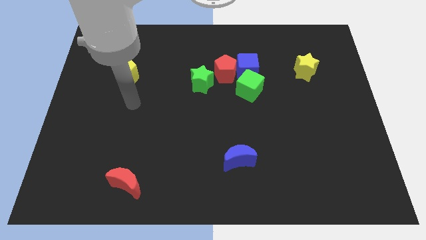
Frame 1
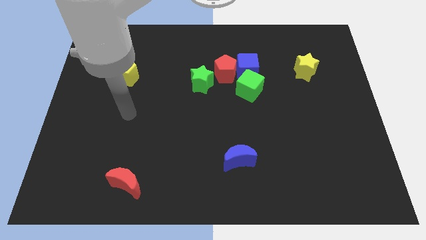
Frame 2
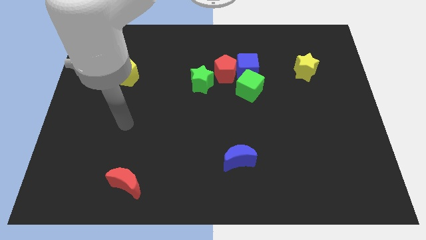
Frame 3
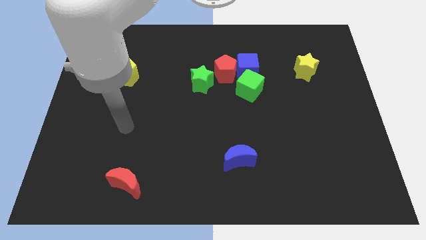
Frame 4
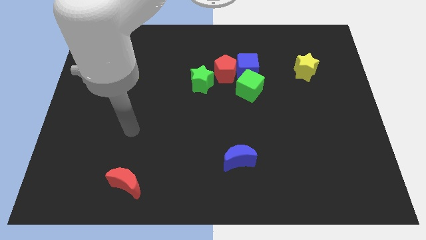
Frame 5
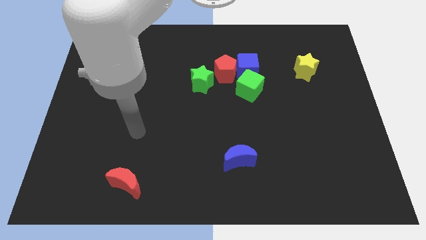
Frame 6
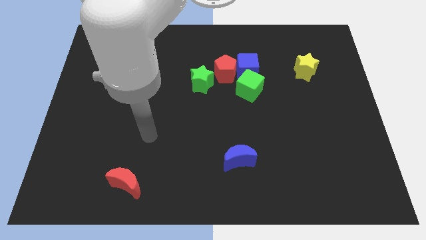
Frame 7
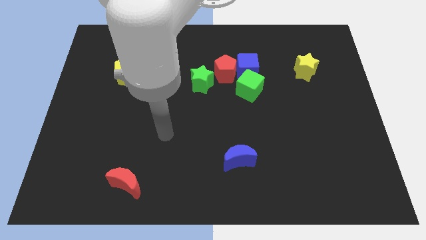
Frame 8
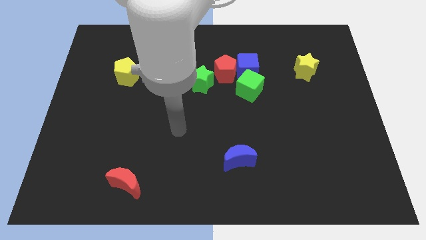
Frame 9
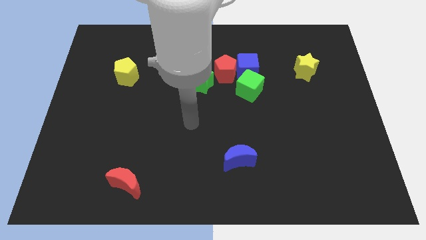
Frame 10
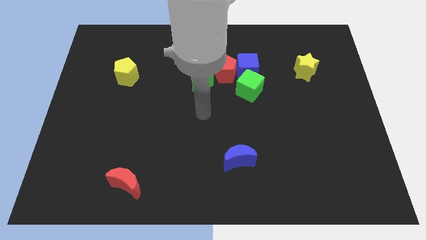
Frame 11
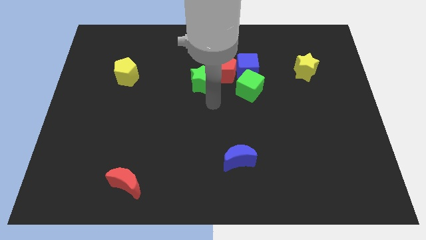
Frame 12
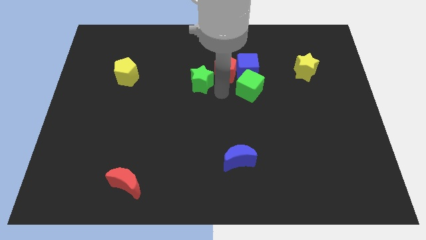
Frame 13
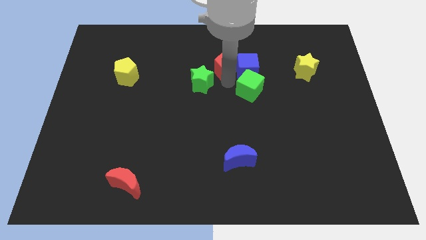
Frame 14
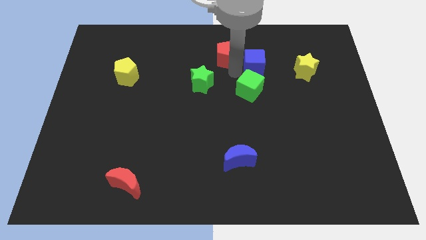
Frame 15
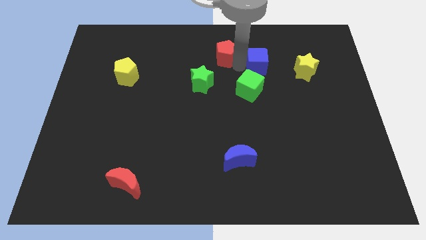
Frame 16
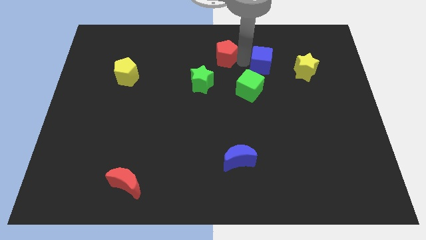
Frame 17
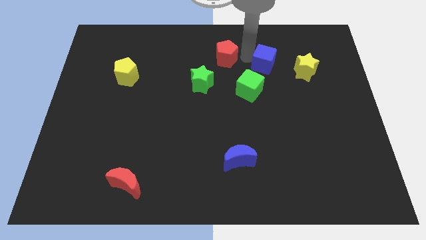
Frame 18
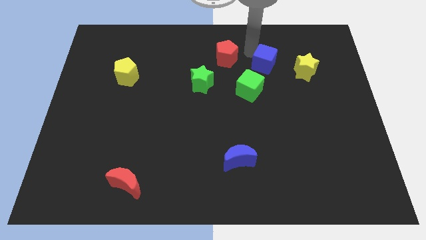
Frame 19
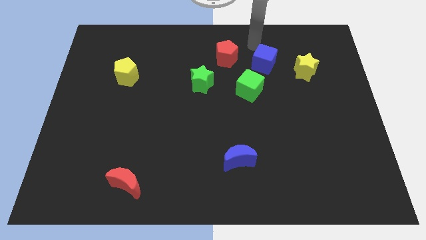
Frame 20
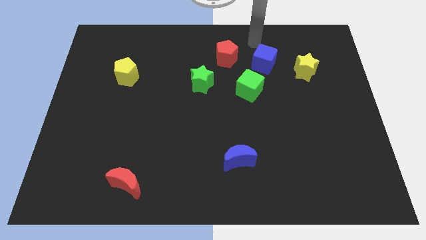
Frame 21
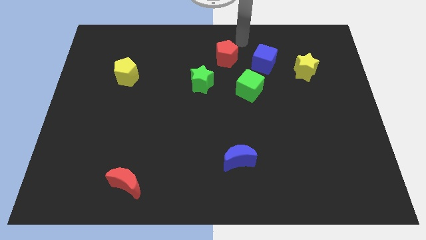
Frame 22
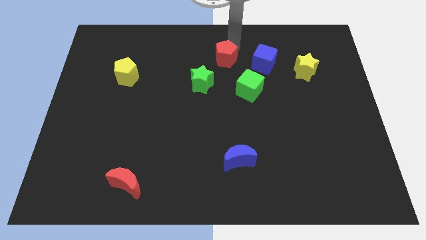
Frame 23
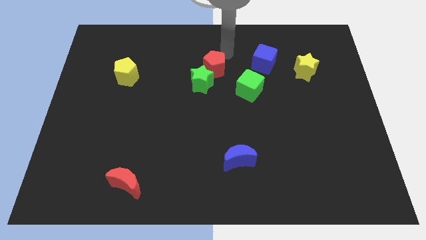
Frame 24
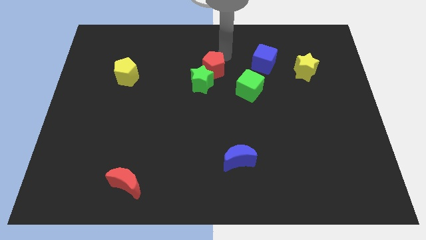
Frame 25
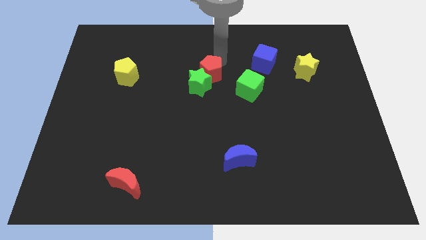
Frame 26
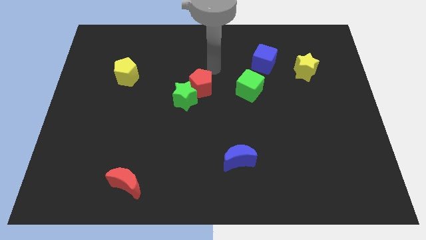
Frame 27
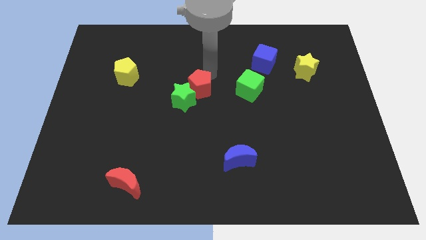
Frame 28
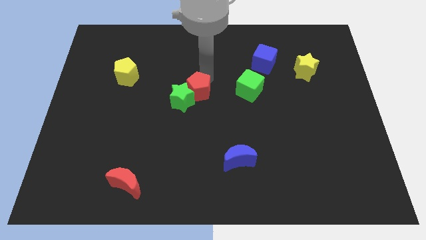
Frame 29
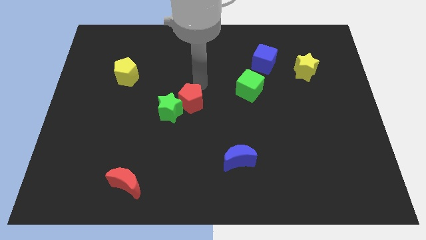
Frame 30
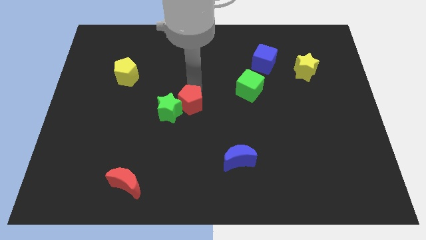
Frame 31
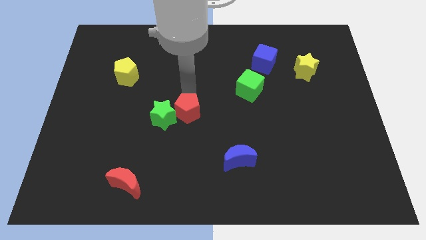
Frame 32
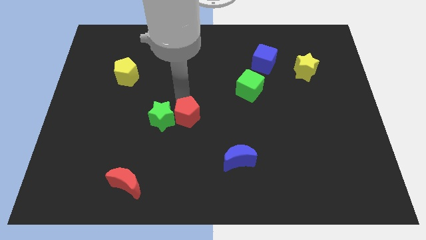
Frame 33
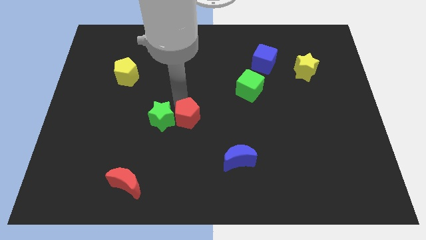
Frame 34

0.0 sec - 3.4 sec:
push the red pentagon into the green star

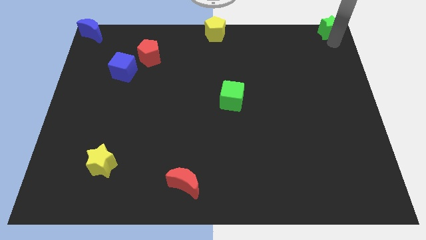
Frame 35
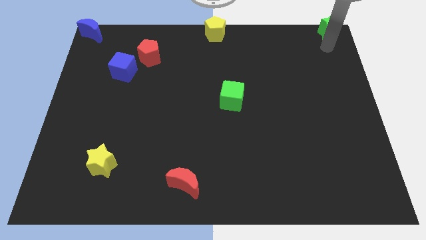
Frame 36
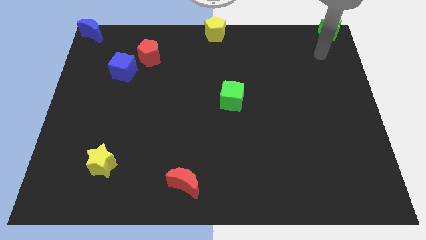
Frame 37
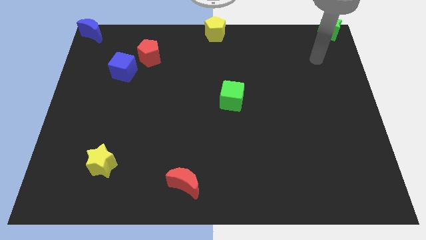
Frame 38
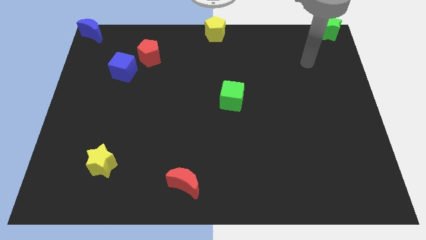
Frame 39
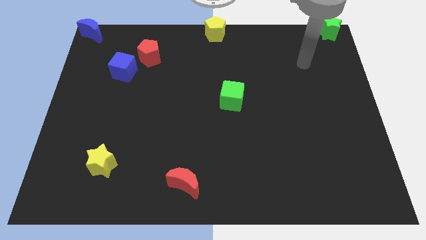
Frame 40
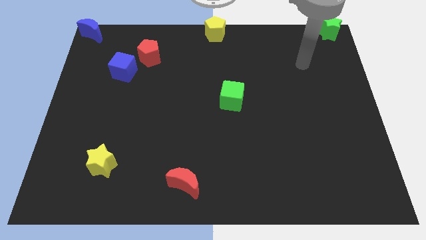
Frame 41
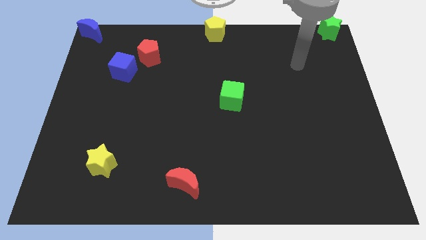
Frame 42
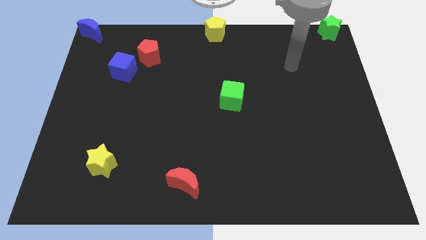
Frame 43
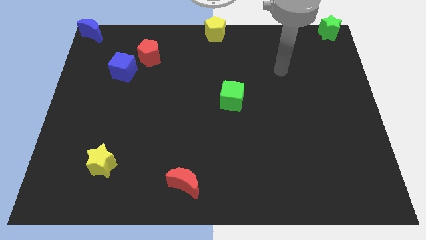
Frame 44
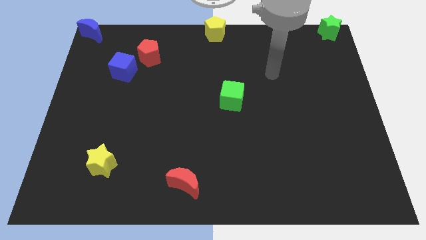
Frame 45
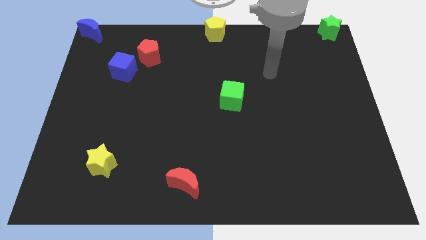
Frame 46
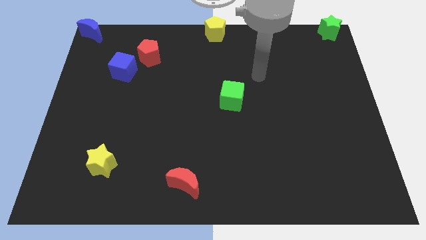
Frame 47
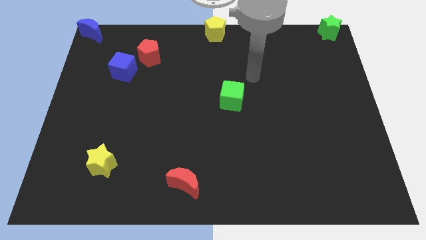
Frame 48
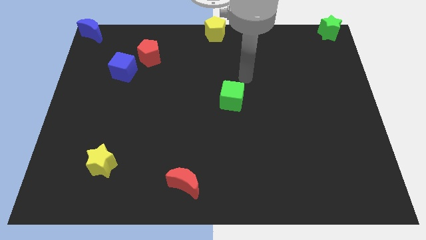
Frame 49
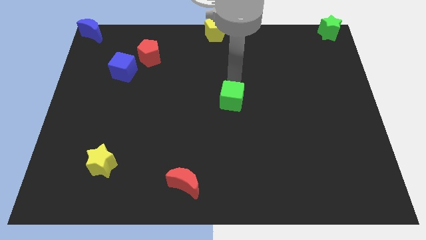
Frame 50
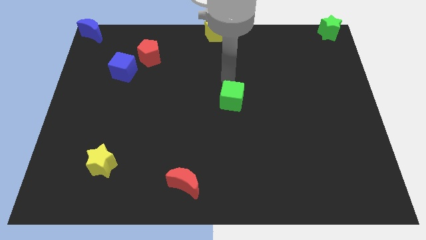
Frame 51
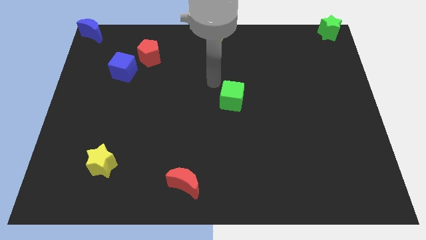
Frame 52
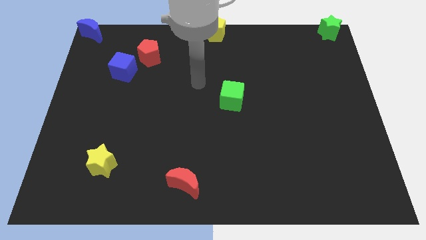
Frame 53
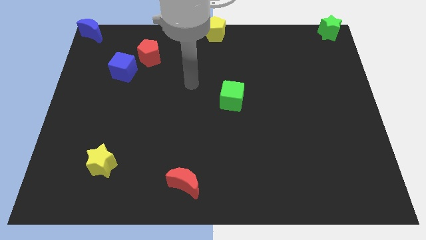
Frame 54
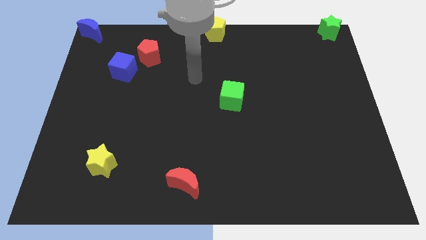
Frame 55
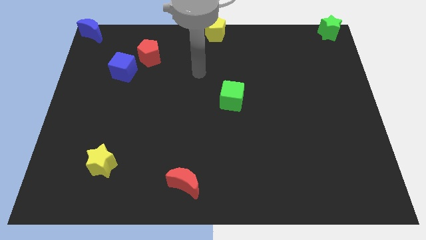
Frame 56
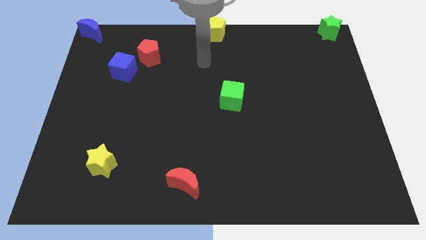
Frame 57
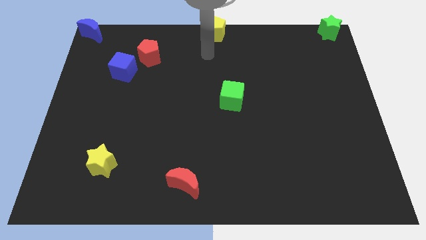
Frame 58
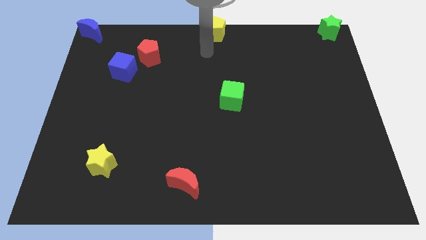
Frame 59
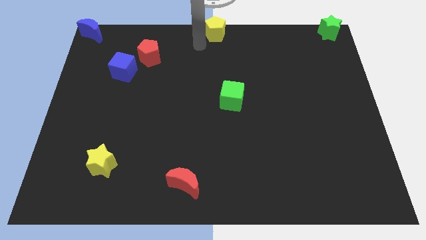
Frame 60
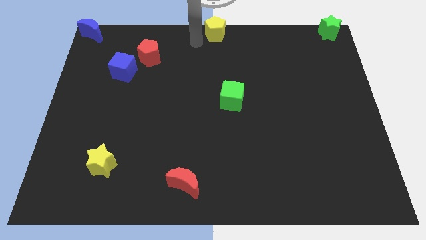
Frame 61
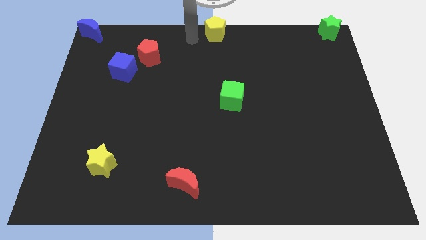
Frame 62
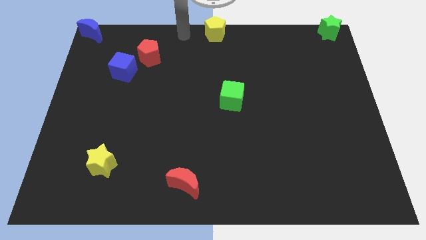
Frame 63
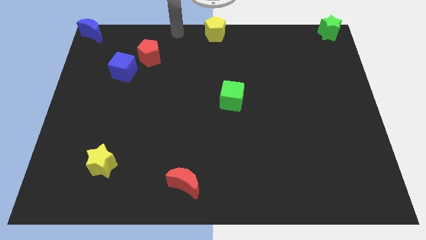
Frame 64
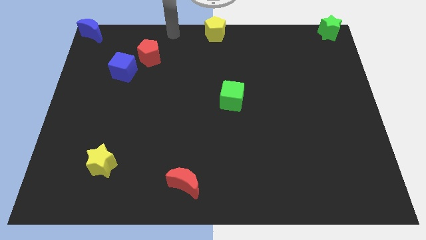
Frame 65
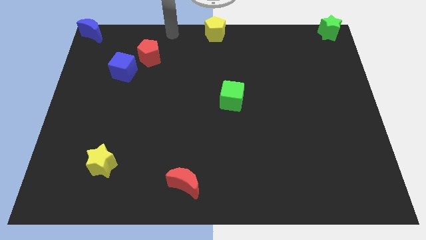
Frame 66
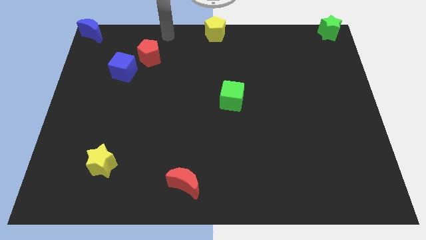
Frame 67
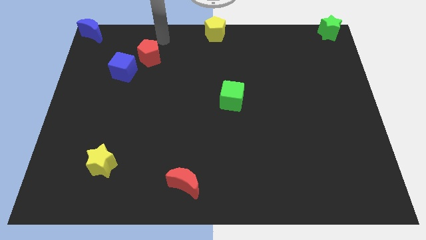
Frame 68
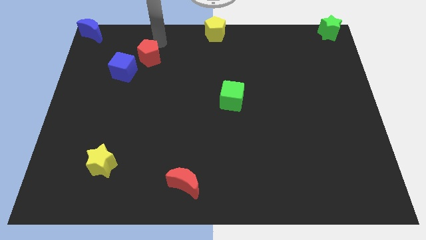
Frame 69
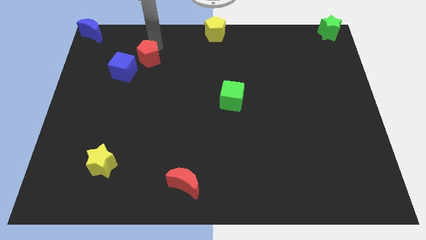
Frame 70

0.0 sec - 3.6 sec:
go away from the green star

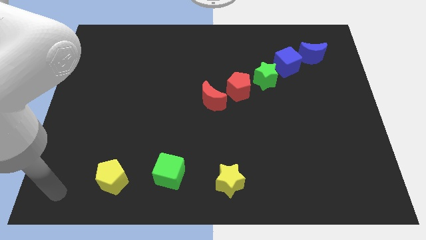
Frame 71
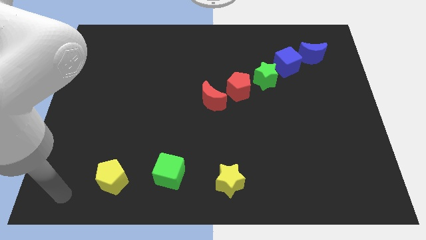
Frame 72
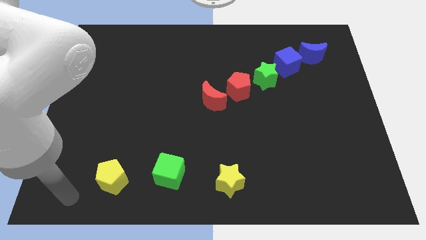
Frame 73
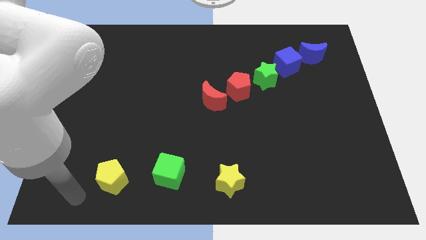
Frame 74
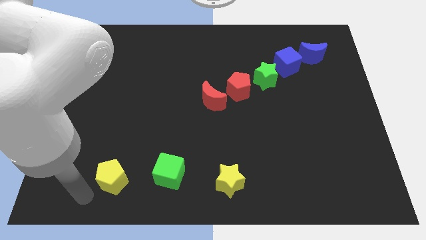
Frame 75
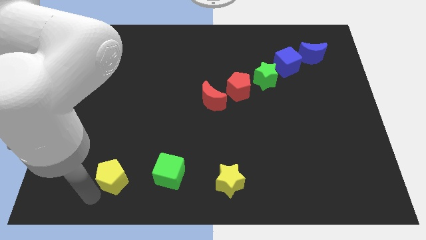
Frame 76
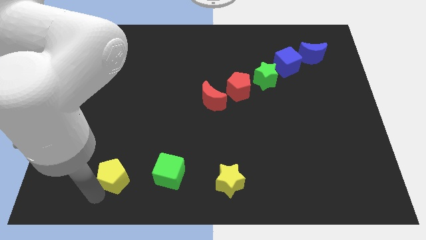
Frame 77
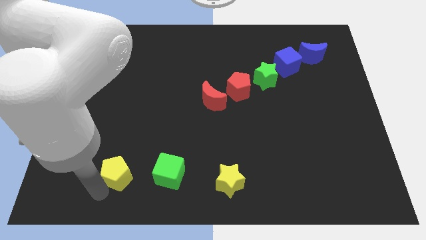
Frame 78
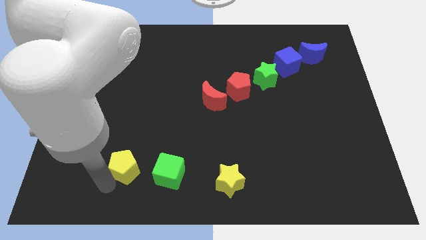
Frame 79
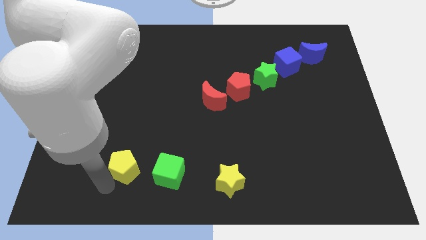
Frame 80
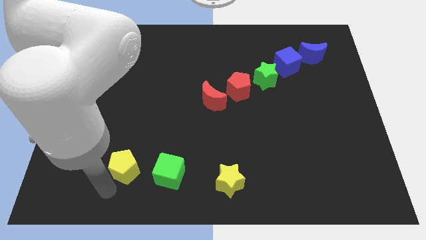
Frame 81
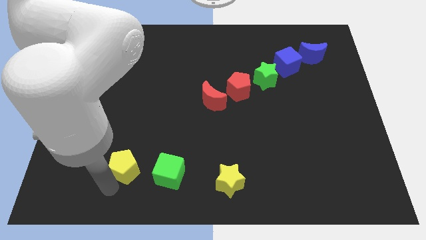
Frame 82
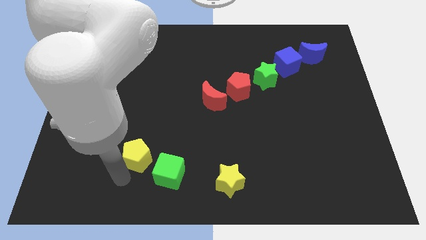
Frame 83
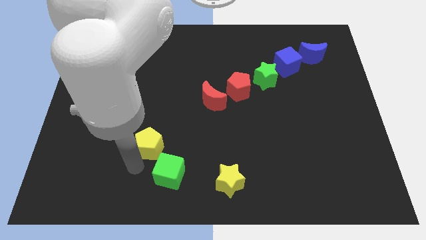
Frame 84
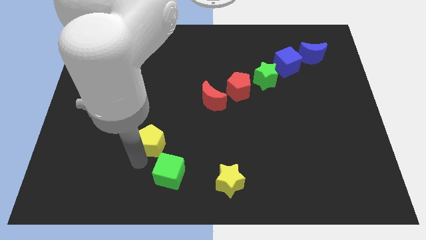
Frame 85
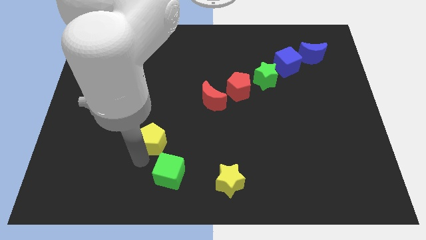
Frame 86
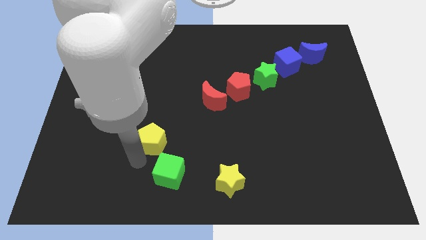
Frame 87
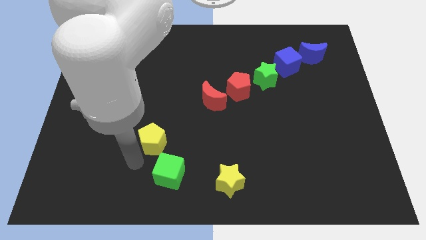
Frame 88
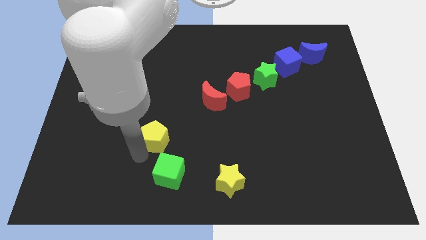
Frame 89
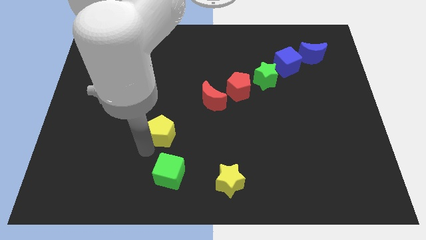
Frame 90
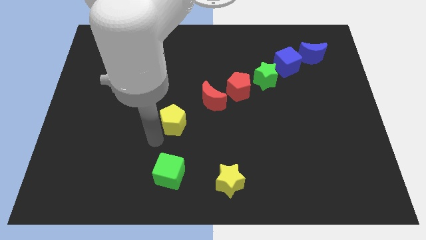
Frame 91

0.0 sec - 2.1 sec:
place yellow pentagon above green cube
